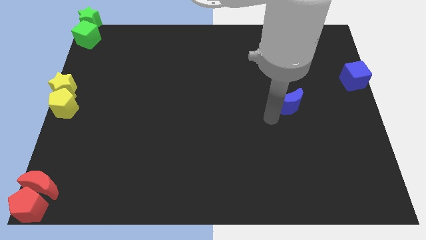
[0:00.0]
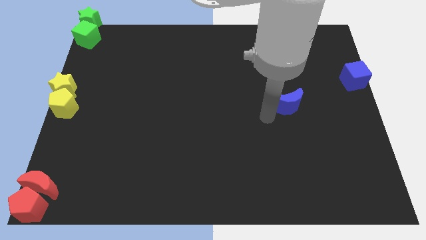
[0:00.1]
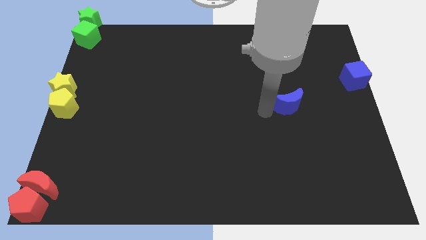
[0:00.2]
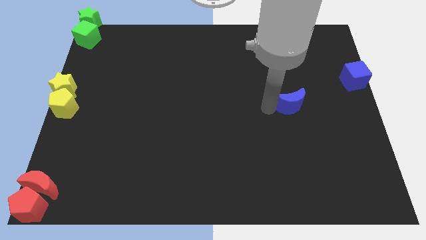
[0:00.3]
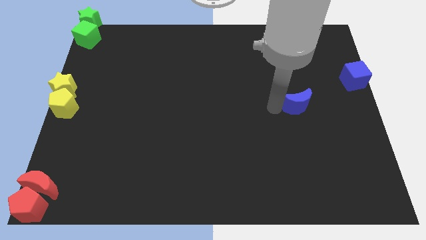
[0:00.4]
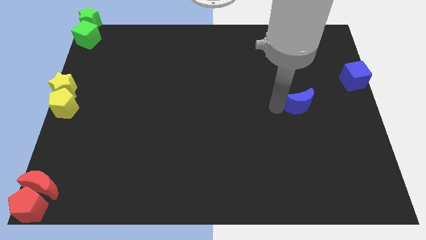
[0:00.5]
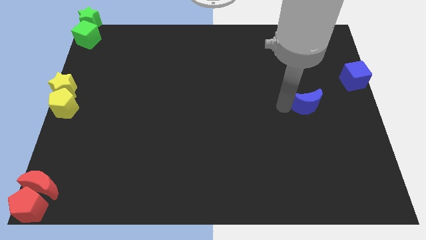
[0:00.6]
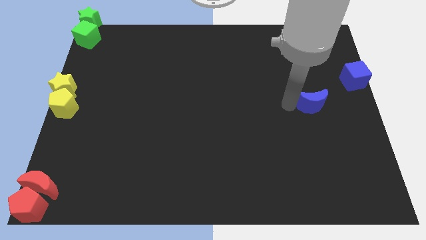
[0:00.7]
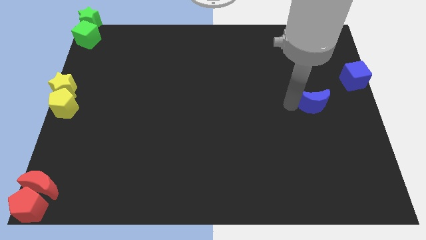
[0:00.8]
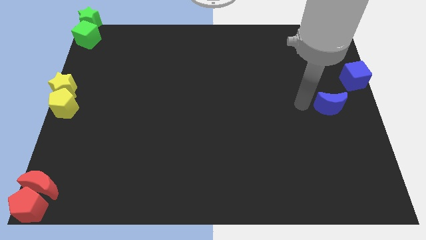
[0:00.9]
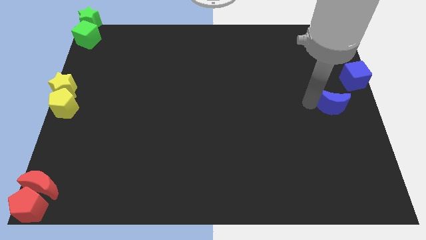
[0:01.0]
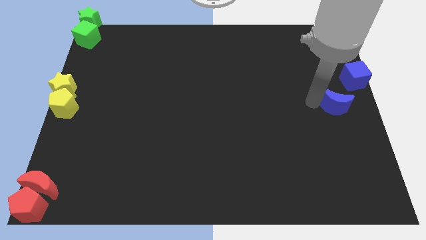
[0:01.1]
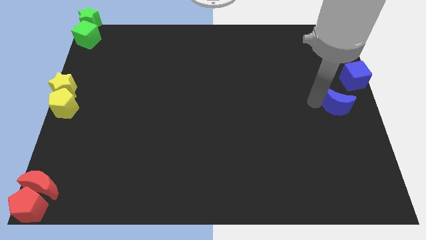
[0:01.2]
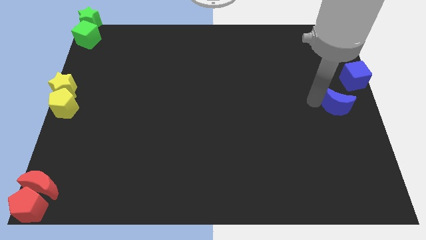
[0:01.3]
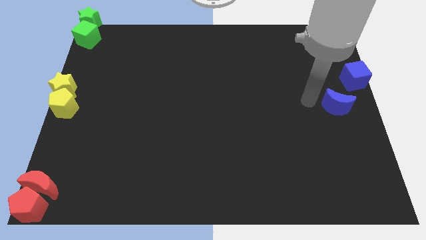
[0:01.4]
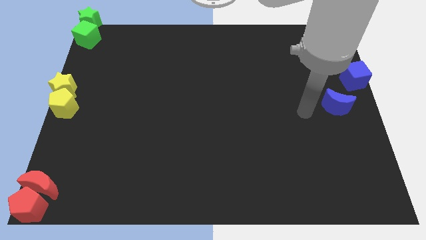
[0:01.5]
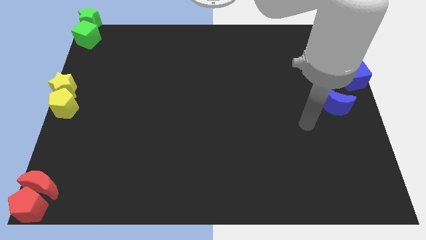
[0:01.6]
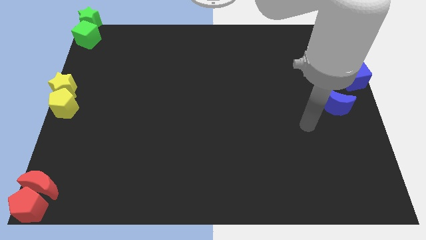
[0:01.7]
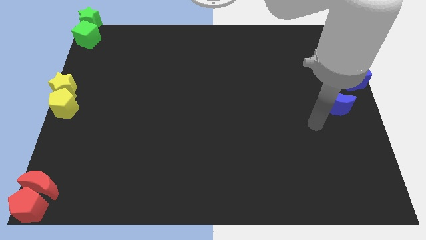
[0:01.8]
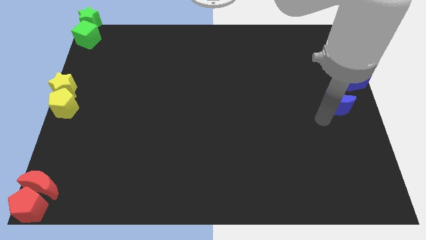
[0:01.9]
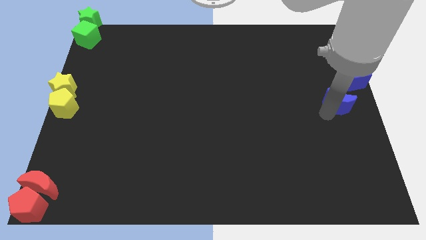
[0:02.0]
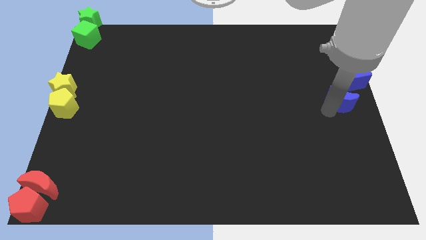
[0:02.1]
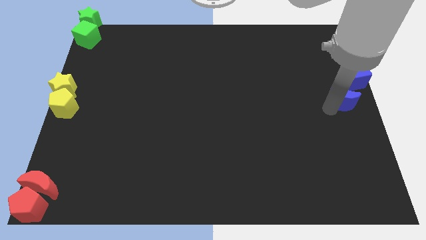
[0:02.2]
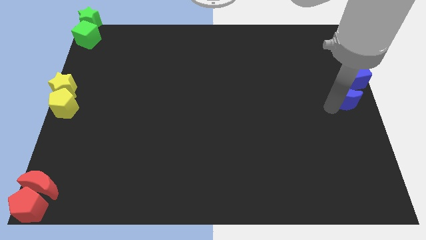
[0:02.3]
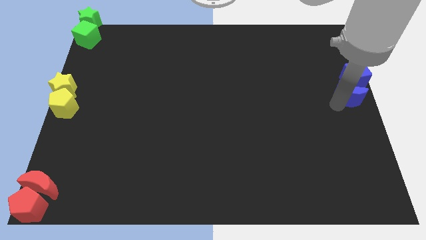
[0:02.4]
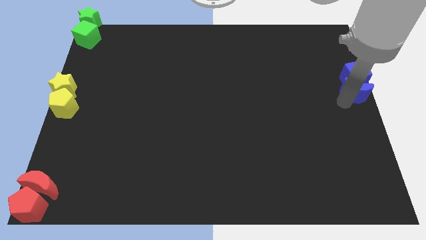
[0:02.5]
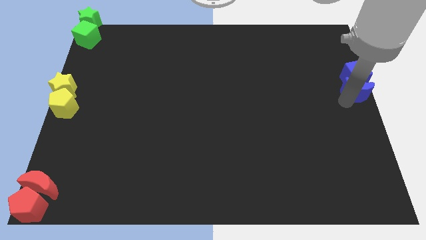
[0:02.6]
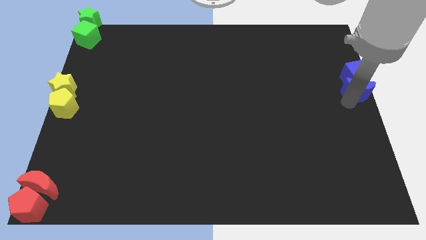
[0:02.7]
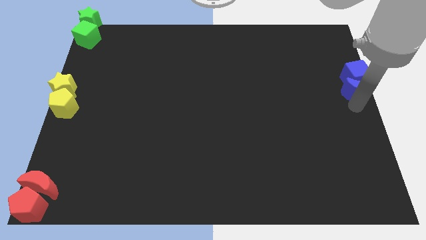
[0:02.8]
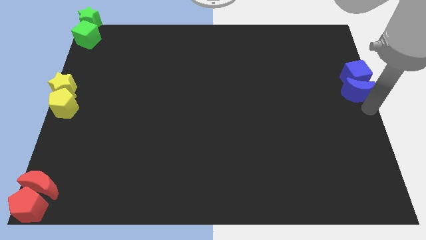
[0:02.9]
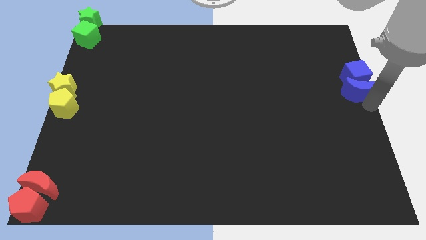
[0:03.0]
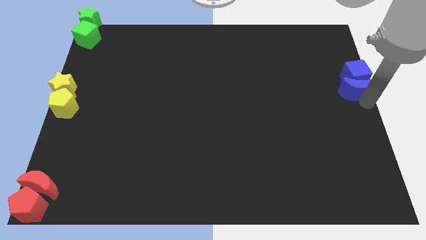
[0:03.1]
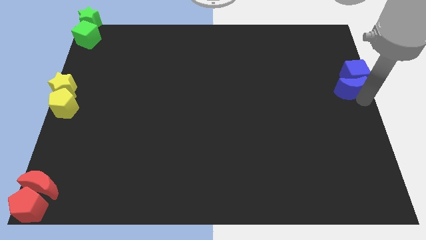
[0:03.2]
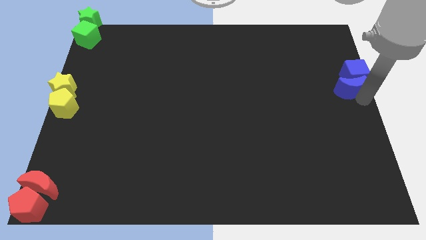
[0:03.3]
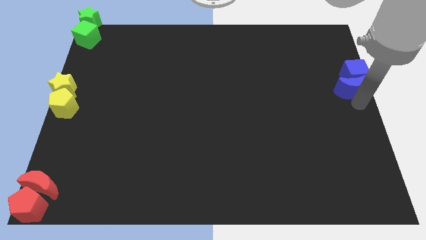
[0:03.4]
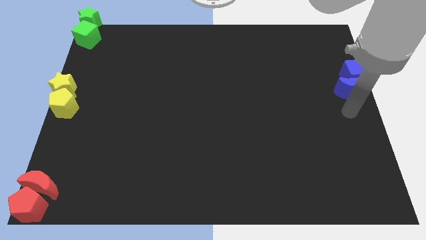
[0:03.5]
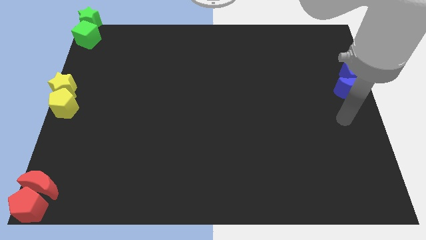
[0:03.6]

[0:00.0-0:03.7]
push the blue crescent into the bottom side of the blue cube

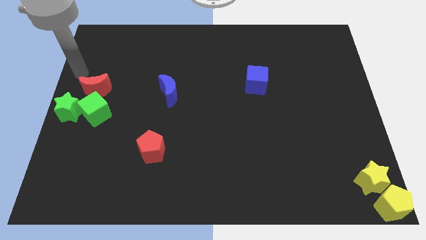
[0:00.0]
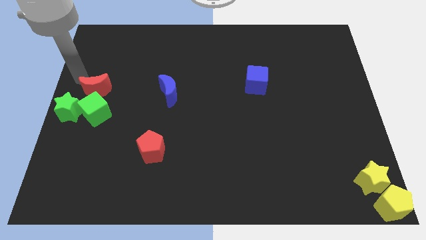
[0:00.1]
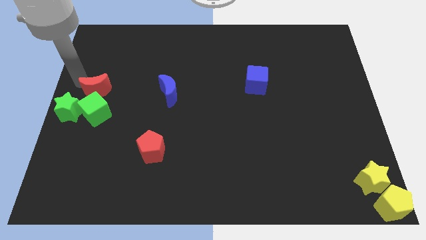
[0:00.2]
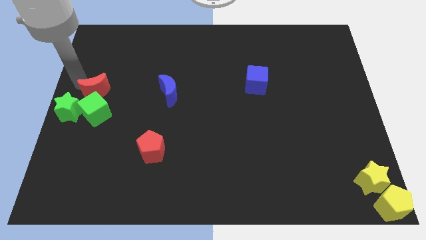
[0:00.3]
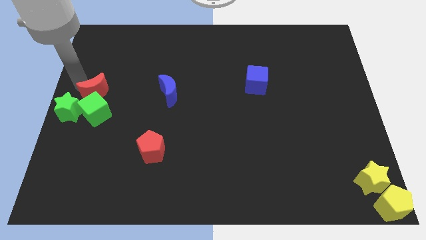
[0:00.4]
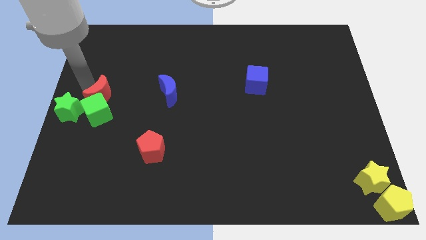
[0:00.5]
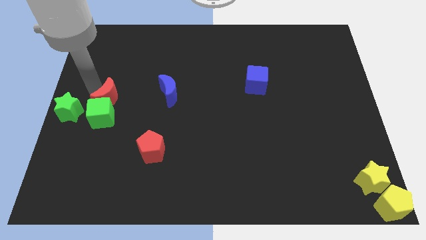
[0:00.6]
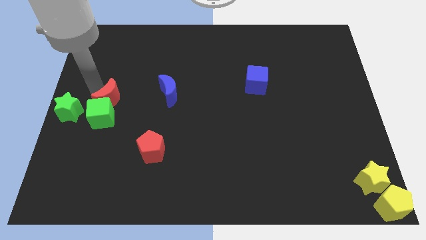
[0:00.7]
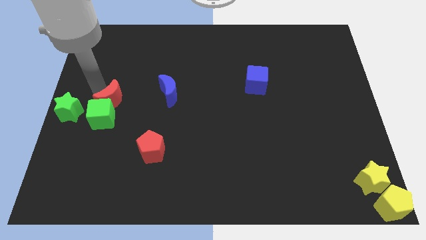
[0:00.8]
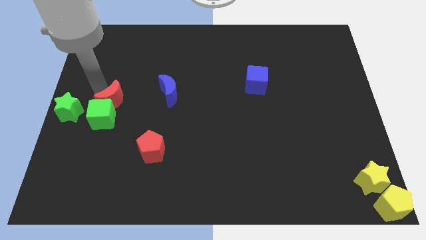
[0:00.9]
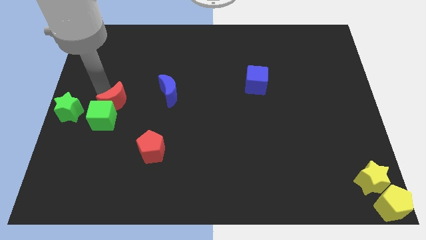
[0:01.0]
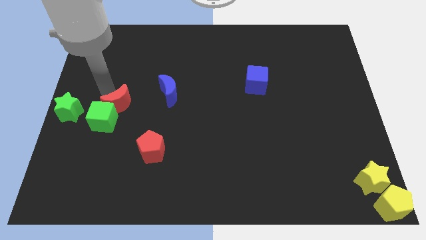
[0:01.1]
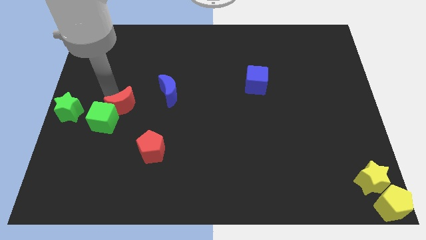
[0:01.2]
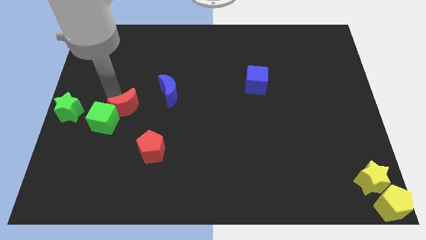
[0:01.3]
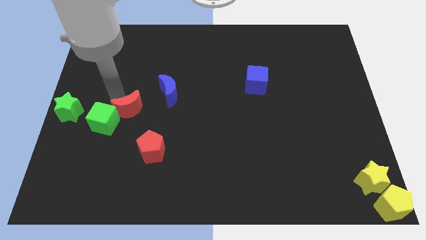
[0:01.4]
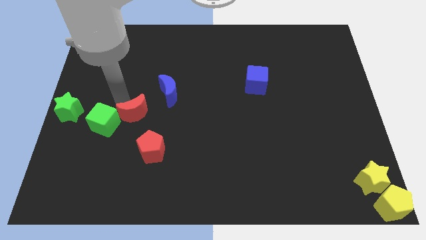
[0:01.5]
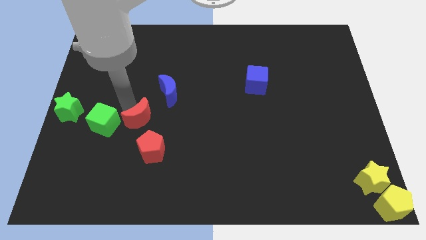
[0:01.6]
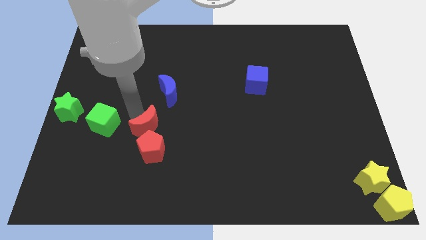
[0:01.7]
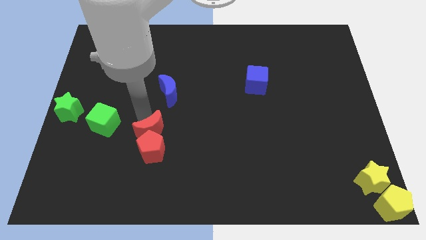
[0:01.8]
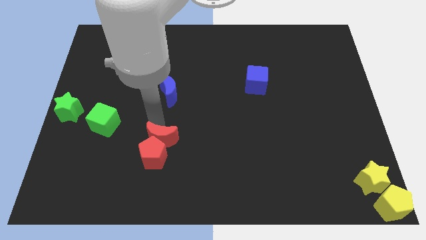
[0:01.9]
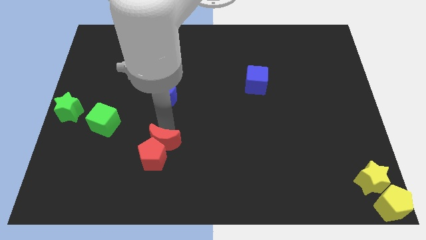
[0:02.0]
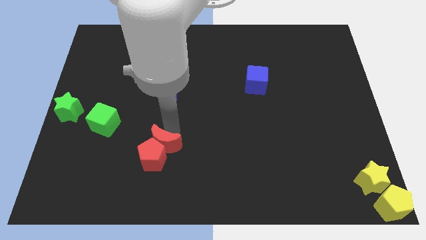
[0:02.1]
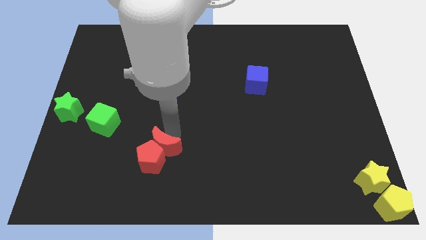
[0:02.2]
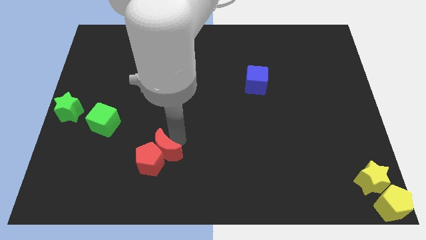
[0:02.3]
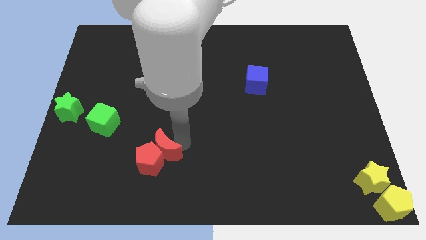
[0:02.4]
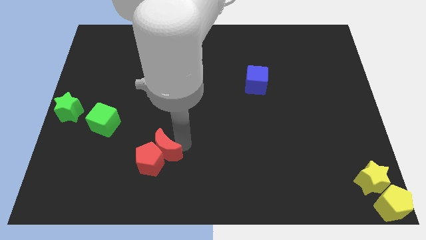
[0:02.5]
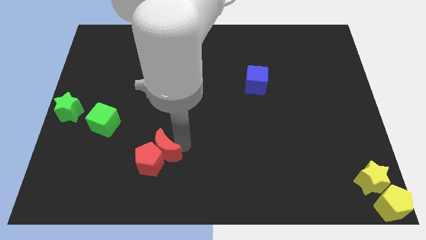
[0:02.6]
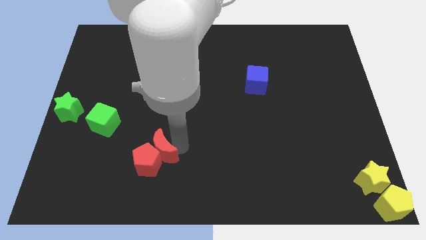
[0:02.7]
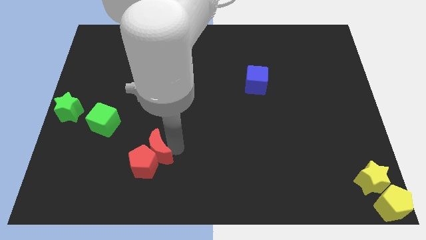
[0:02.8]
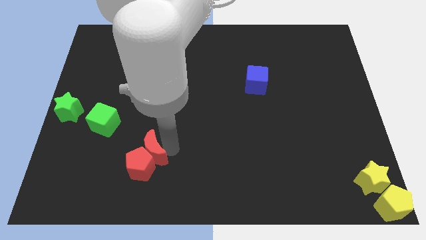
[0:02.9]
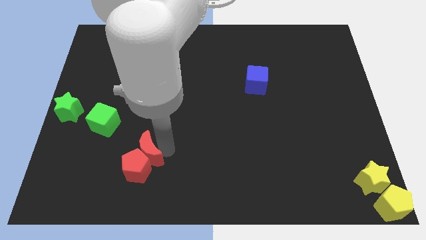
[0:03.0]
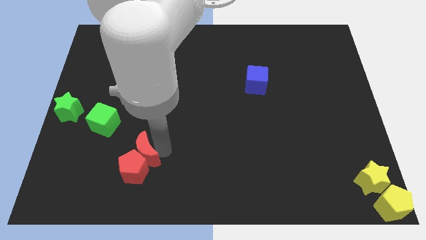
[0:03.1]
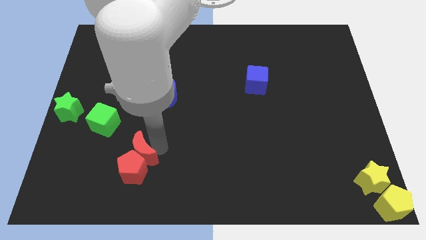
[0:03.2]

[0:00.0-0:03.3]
push the red moon into the top right side of the red pentagon

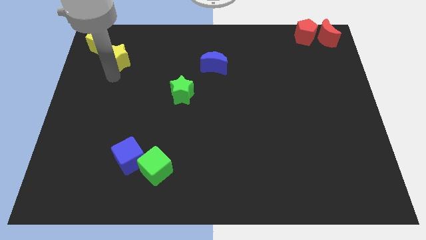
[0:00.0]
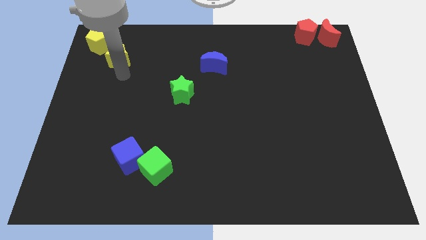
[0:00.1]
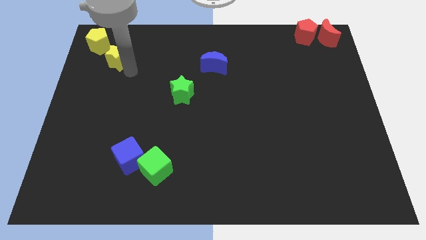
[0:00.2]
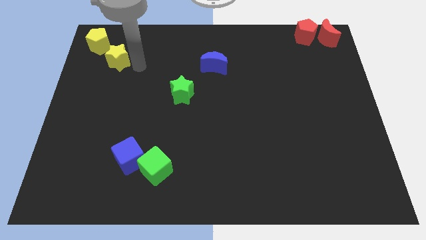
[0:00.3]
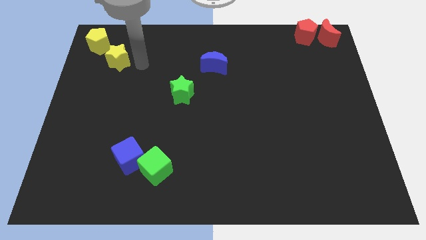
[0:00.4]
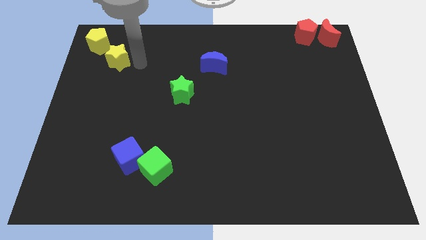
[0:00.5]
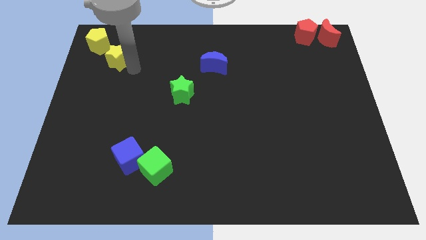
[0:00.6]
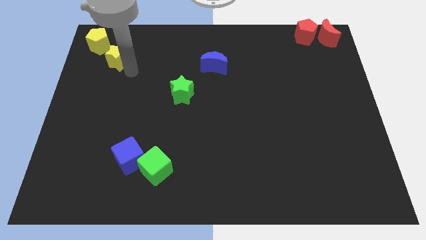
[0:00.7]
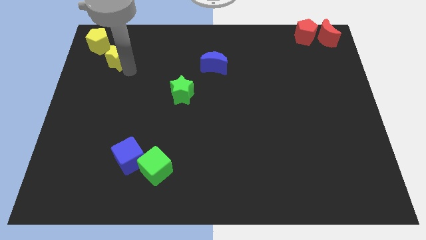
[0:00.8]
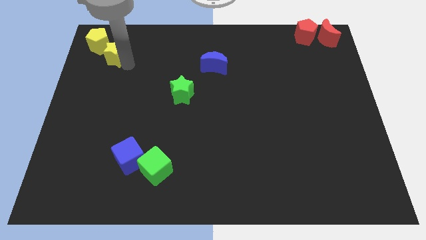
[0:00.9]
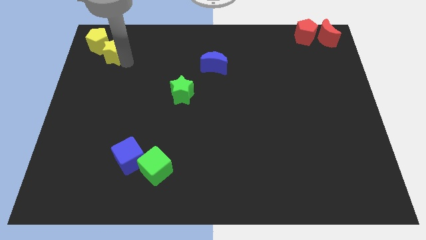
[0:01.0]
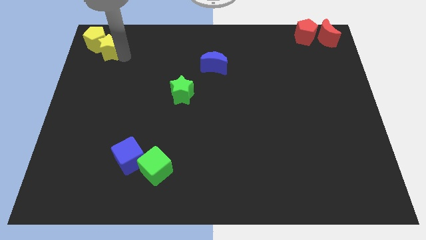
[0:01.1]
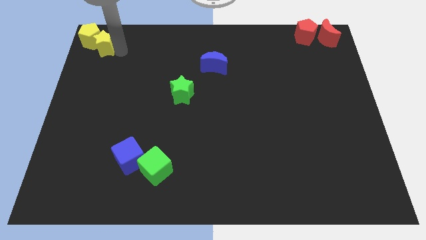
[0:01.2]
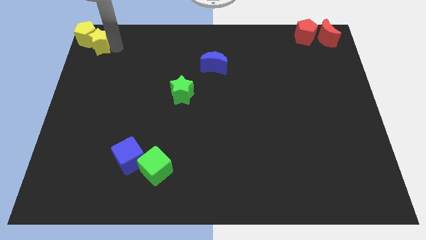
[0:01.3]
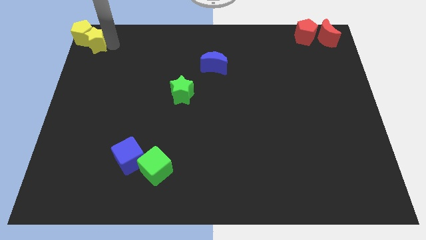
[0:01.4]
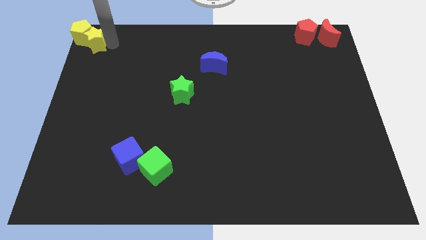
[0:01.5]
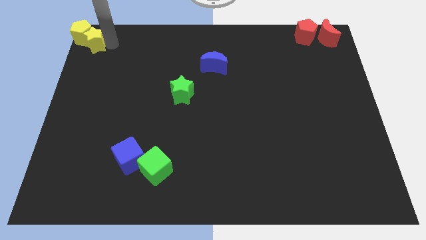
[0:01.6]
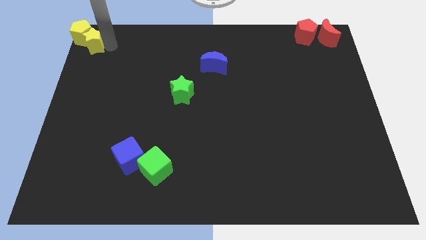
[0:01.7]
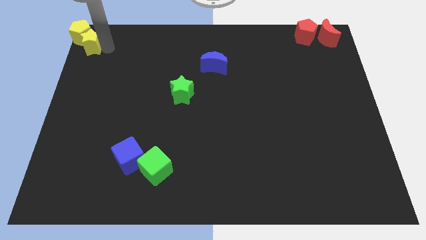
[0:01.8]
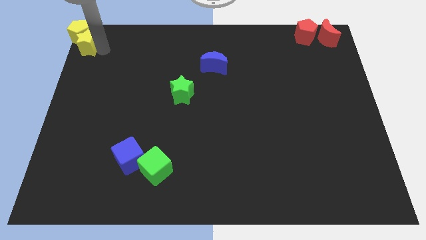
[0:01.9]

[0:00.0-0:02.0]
move the yellow star and yellow pentagon to top left corner

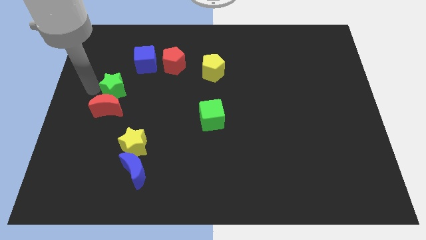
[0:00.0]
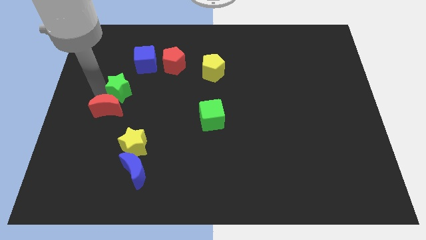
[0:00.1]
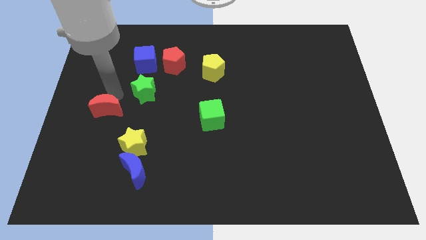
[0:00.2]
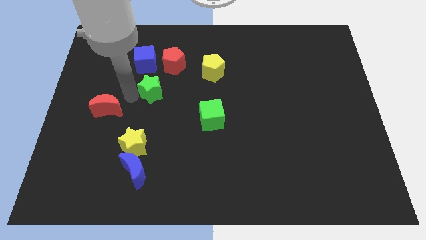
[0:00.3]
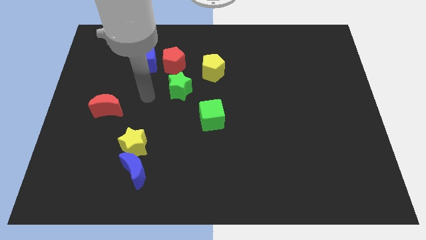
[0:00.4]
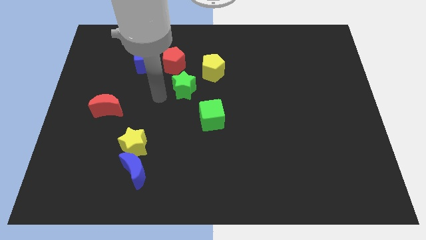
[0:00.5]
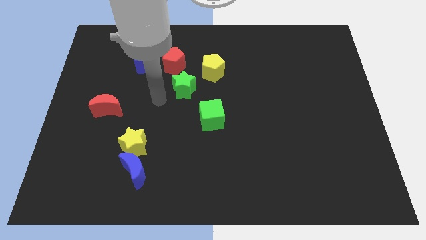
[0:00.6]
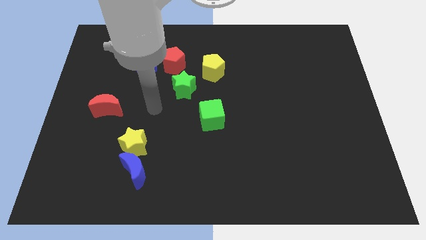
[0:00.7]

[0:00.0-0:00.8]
separate the green star from the red crescent
